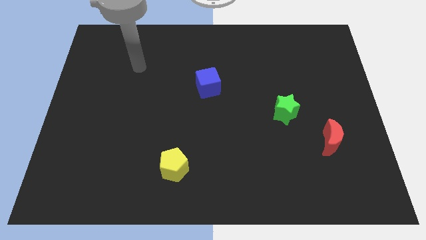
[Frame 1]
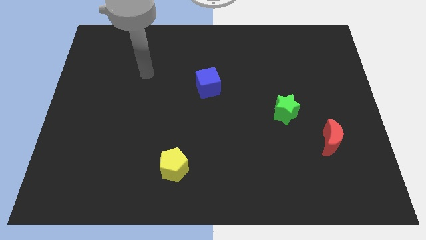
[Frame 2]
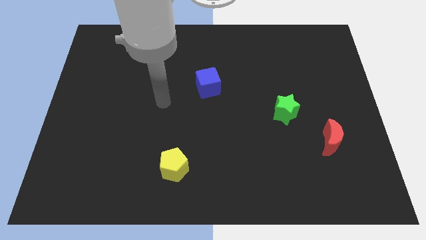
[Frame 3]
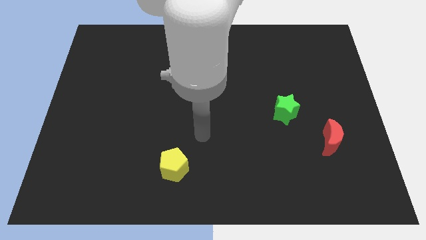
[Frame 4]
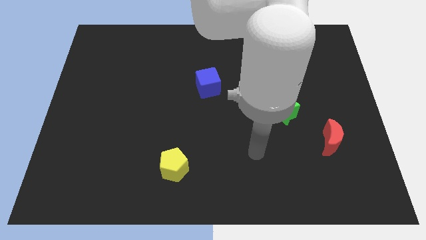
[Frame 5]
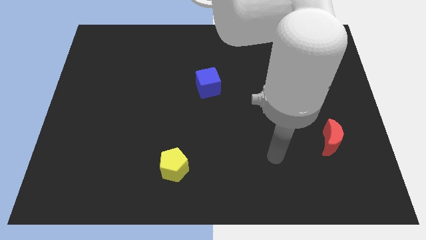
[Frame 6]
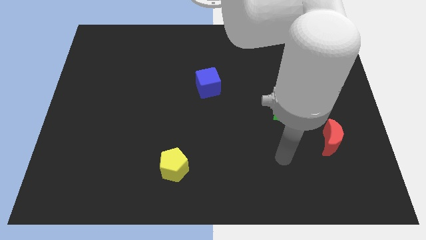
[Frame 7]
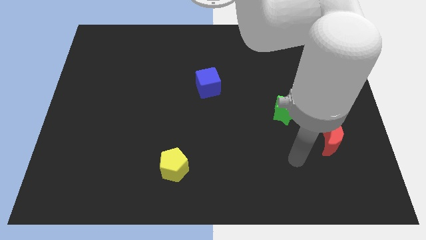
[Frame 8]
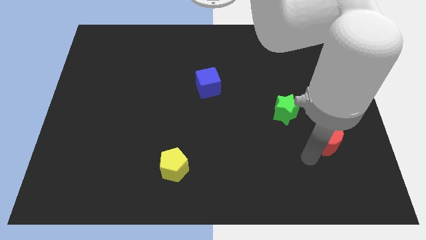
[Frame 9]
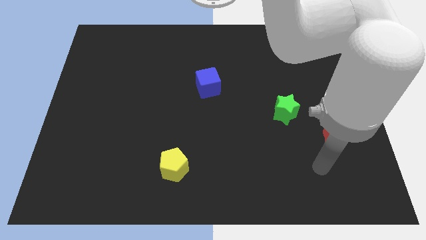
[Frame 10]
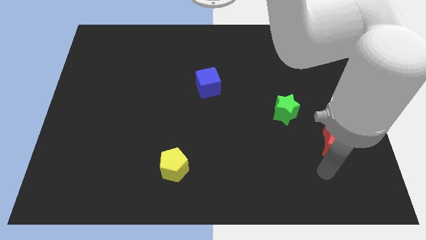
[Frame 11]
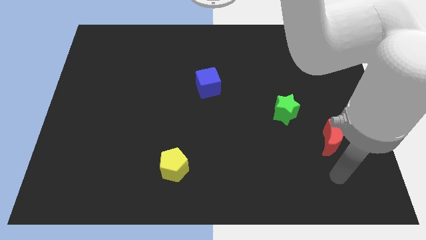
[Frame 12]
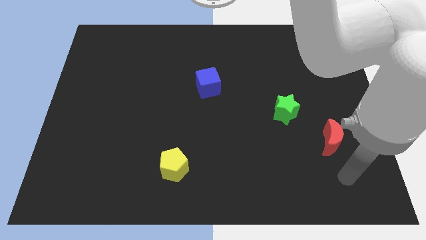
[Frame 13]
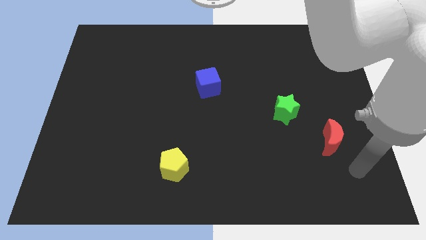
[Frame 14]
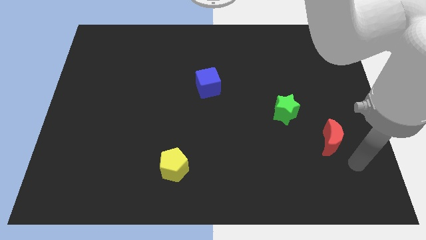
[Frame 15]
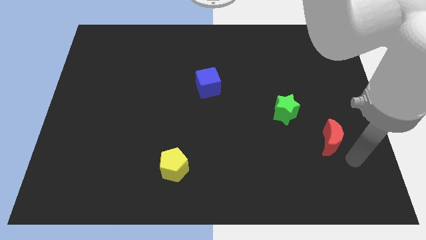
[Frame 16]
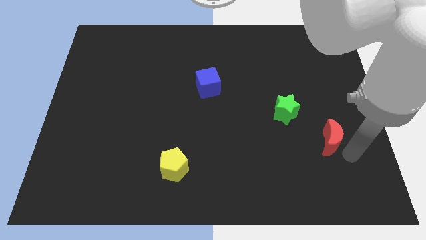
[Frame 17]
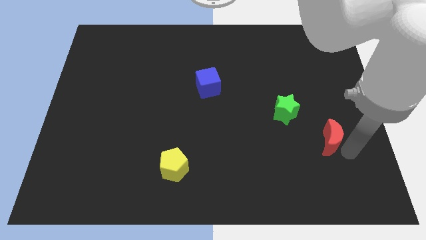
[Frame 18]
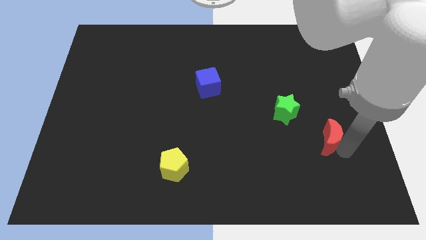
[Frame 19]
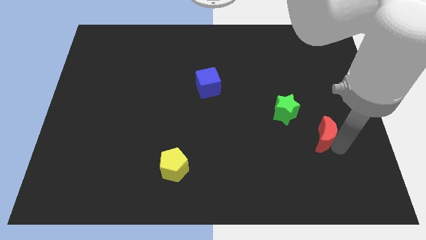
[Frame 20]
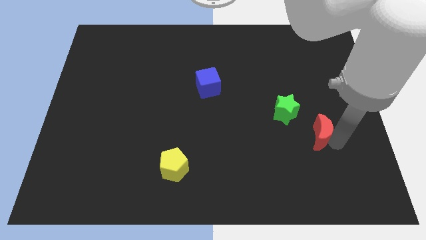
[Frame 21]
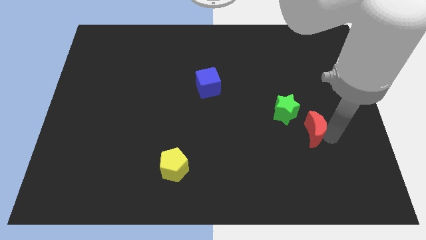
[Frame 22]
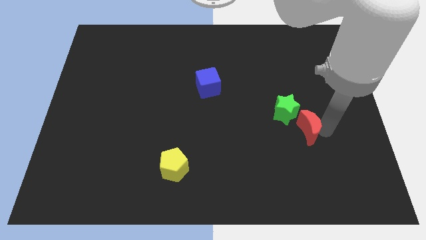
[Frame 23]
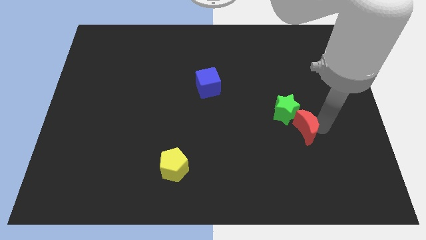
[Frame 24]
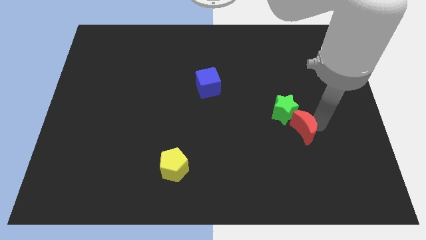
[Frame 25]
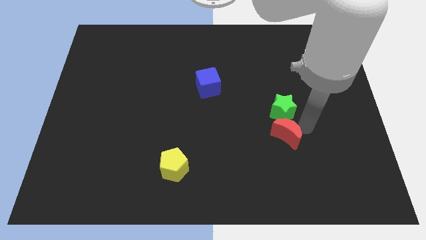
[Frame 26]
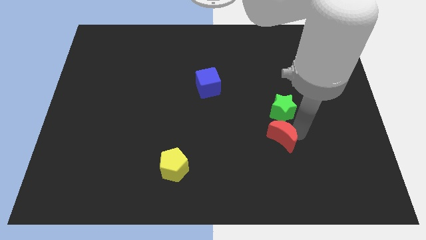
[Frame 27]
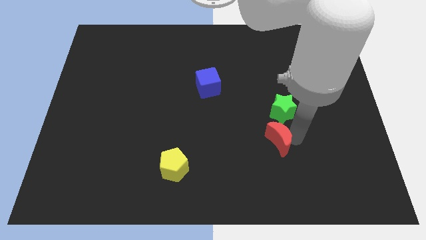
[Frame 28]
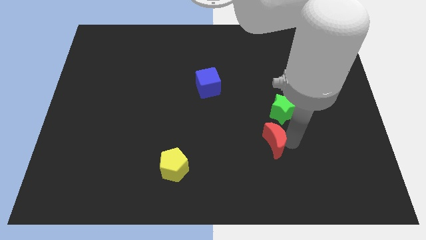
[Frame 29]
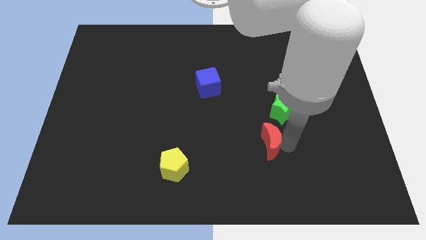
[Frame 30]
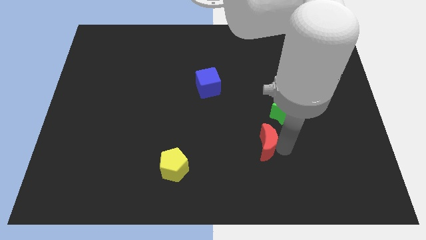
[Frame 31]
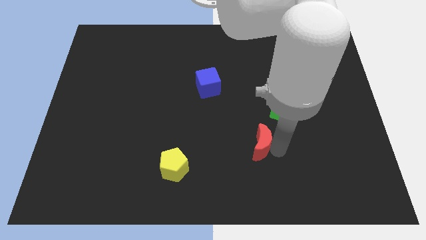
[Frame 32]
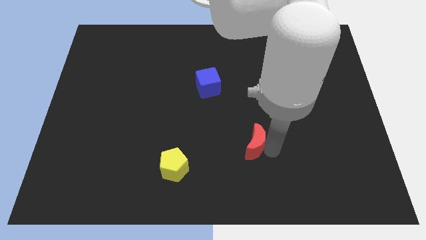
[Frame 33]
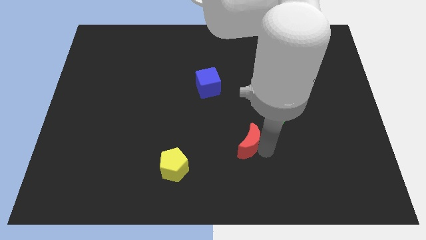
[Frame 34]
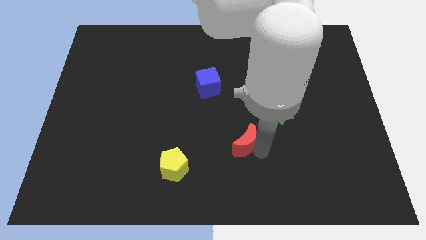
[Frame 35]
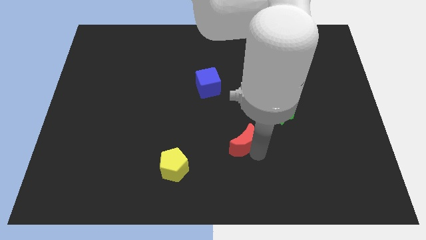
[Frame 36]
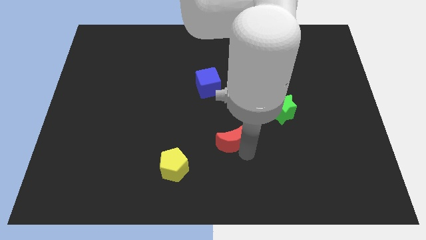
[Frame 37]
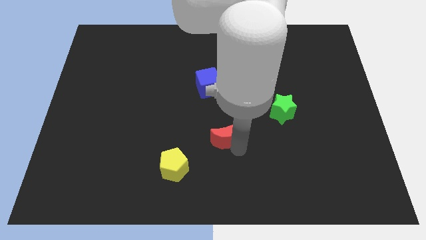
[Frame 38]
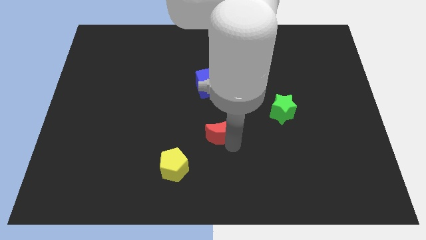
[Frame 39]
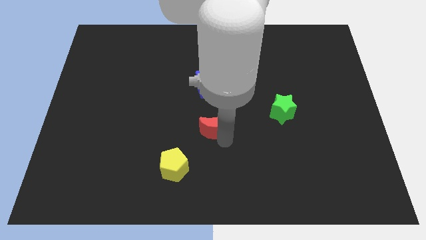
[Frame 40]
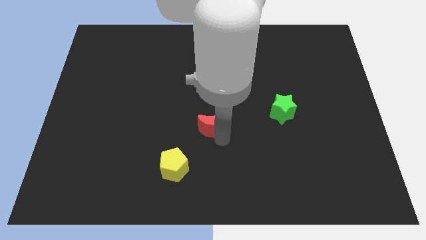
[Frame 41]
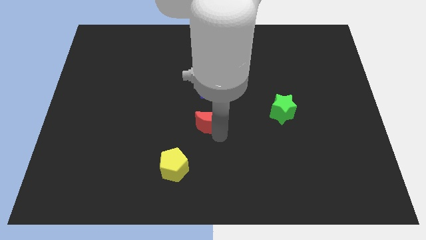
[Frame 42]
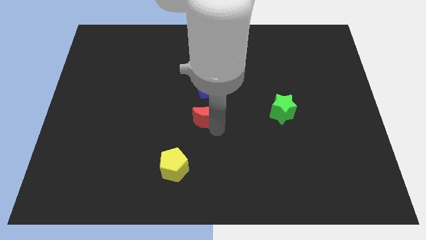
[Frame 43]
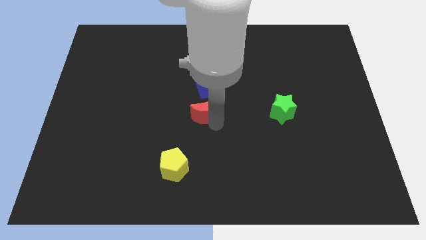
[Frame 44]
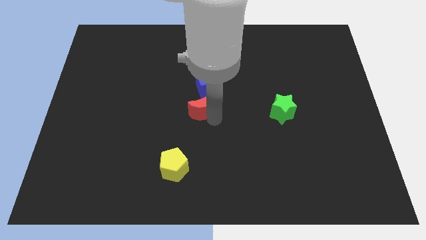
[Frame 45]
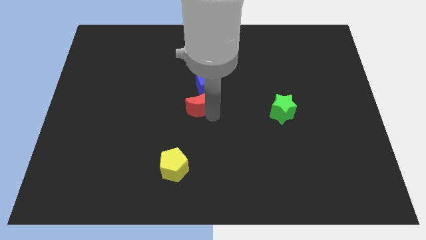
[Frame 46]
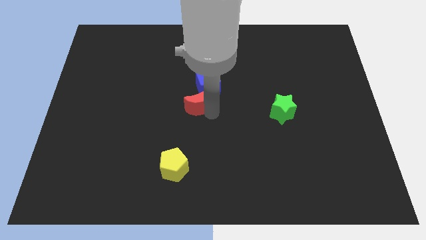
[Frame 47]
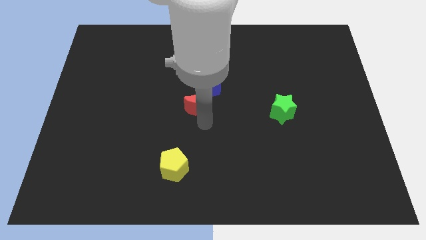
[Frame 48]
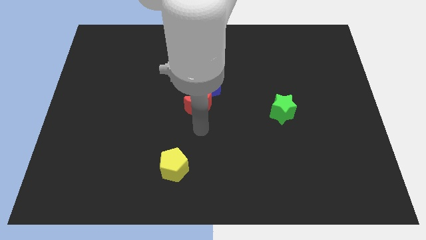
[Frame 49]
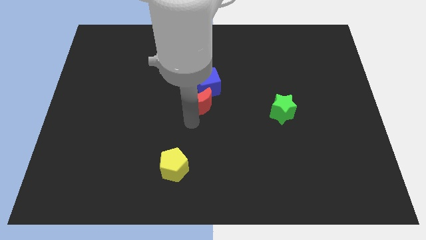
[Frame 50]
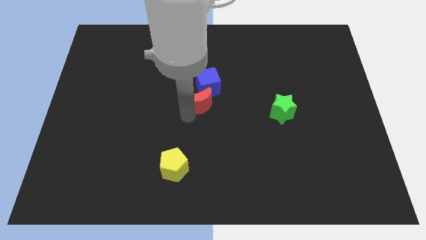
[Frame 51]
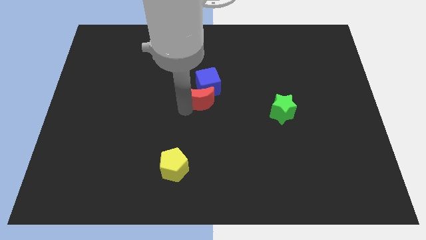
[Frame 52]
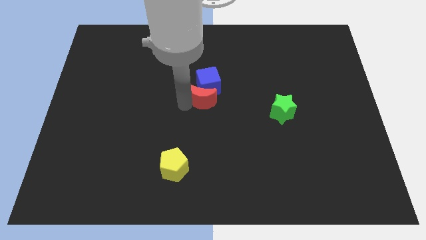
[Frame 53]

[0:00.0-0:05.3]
slide the red block close to the blue block

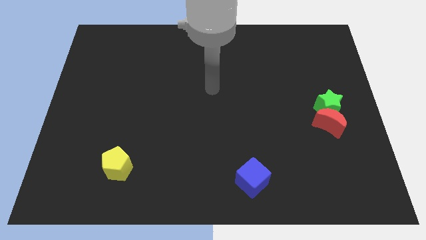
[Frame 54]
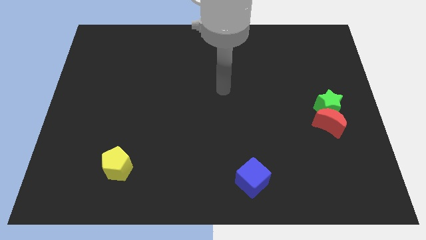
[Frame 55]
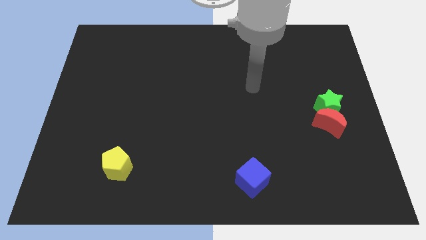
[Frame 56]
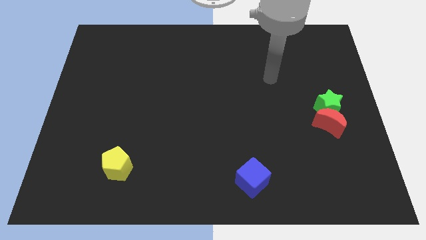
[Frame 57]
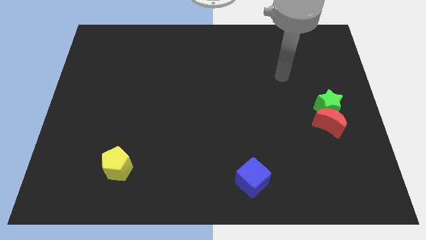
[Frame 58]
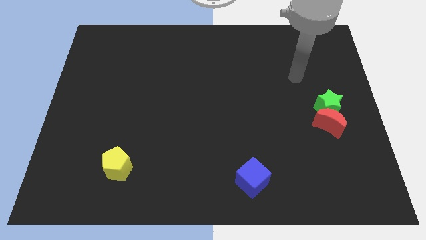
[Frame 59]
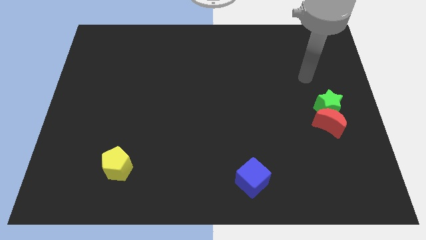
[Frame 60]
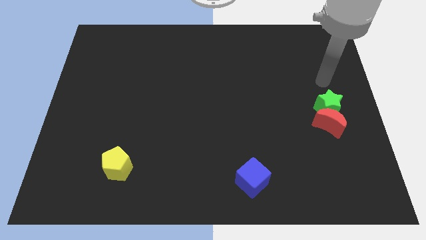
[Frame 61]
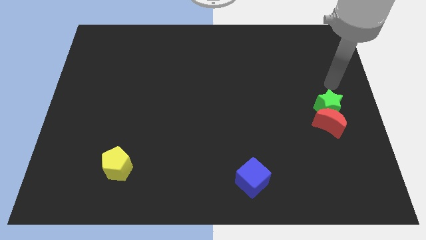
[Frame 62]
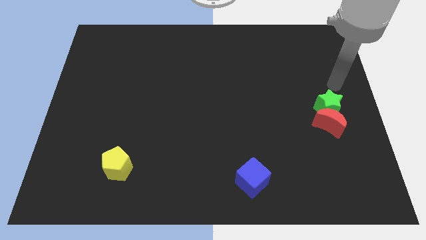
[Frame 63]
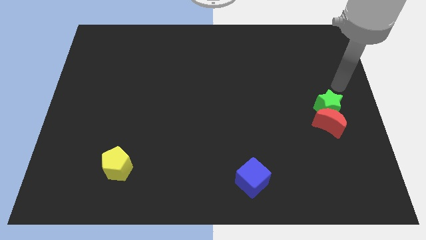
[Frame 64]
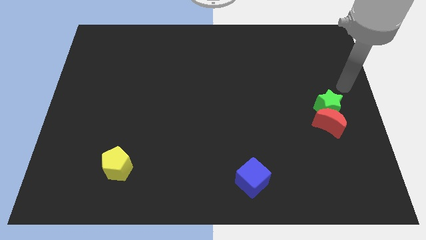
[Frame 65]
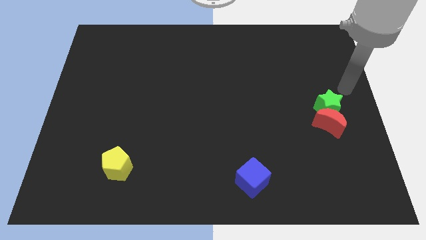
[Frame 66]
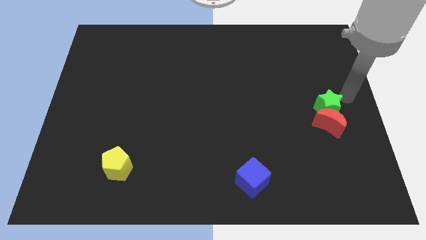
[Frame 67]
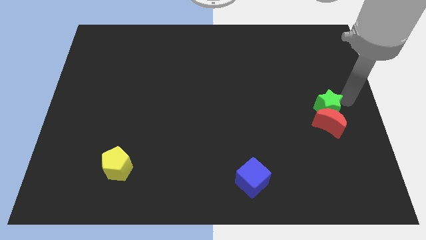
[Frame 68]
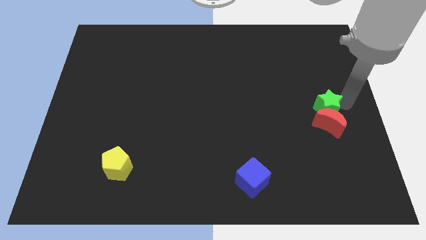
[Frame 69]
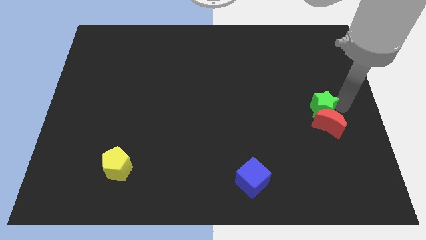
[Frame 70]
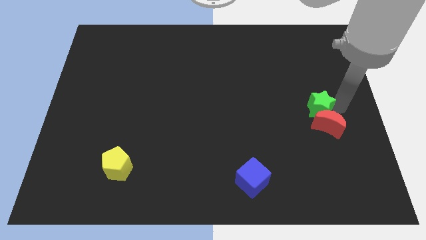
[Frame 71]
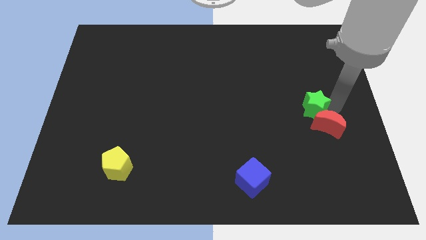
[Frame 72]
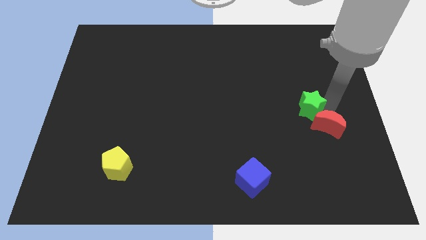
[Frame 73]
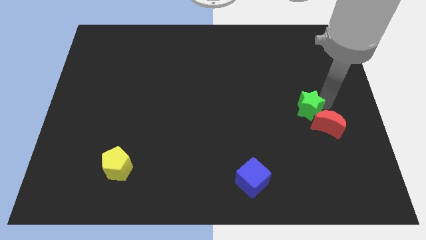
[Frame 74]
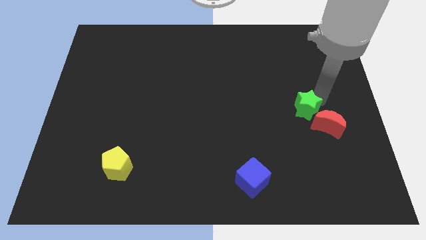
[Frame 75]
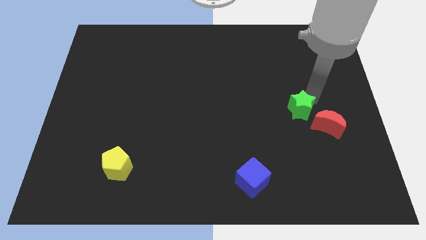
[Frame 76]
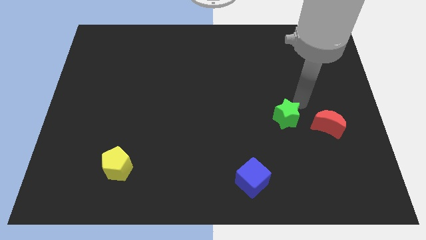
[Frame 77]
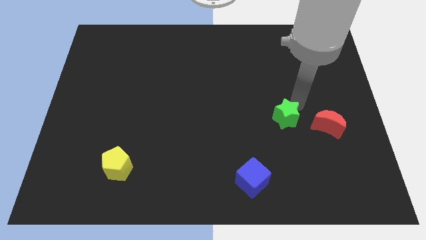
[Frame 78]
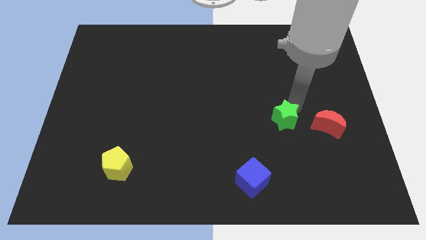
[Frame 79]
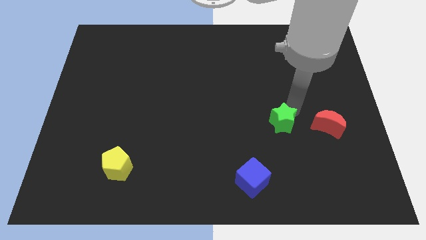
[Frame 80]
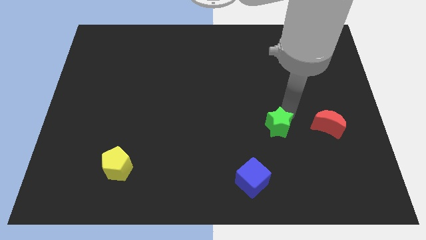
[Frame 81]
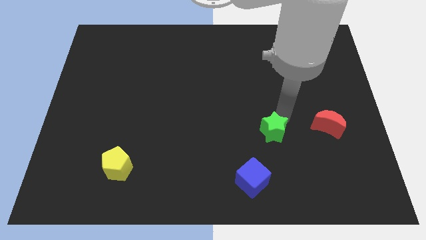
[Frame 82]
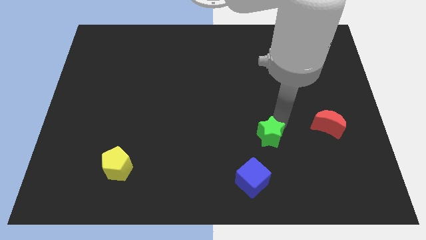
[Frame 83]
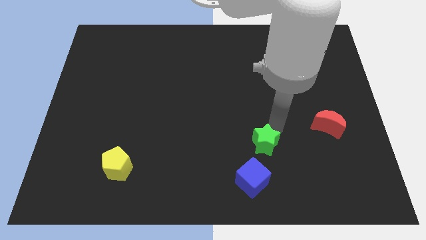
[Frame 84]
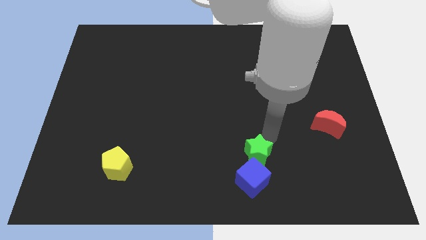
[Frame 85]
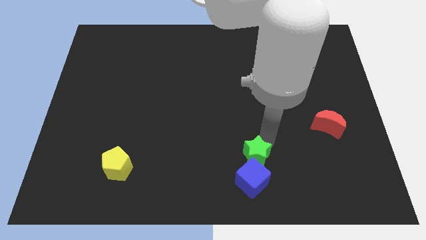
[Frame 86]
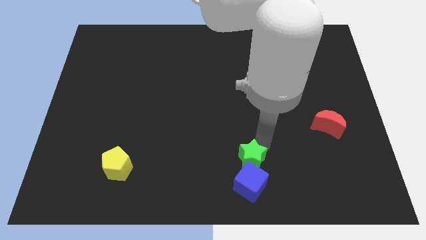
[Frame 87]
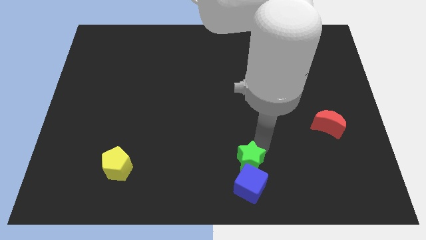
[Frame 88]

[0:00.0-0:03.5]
slide the star next to the blue cube
